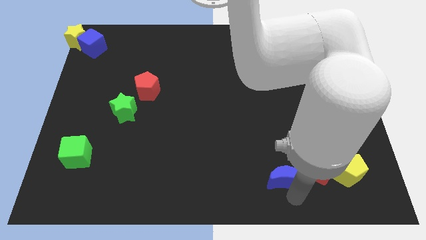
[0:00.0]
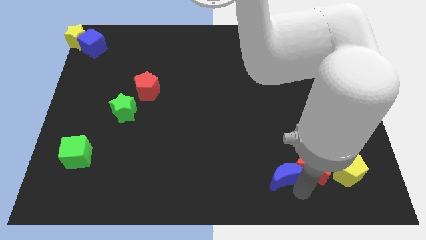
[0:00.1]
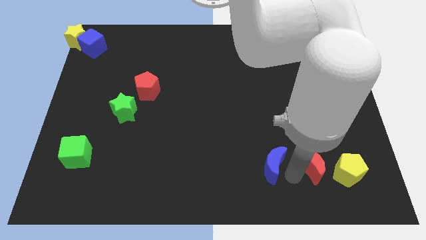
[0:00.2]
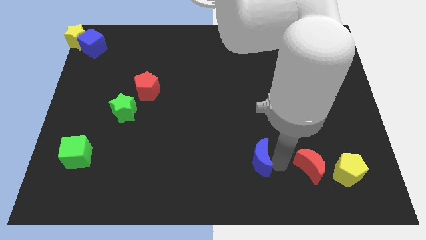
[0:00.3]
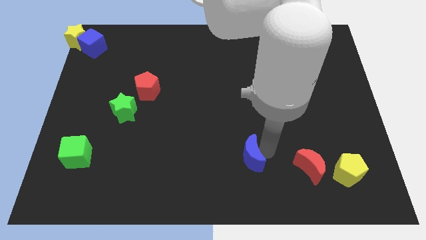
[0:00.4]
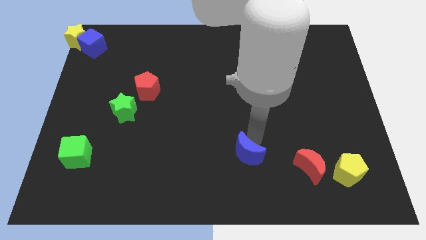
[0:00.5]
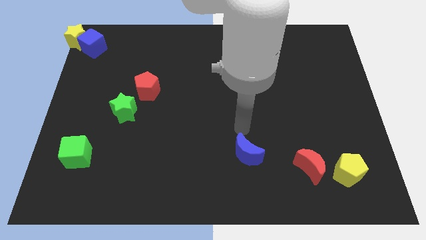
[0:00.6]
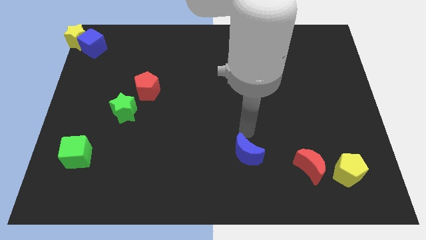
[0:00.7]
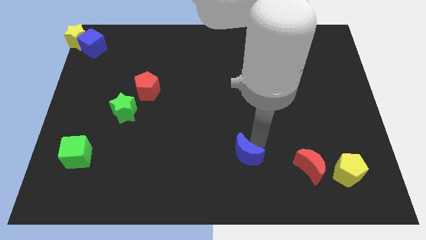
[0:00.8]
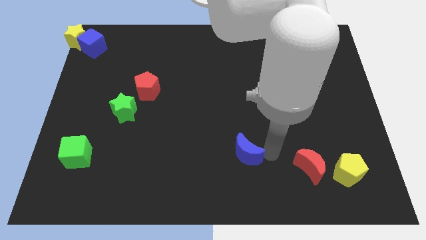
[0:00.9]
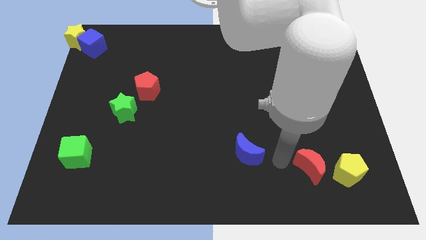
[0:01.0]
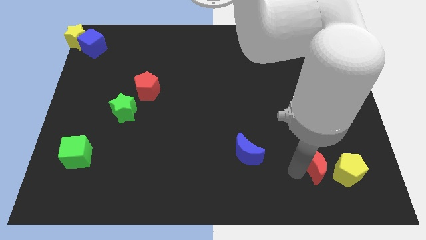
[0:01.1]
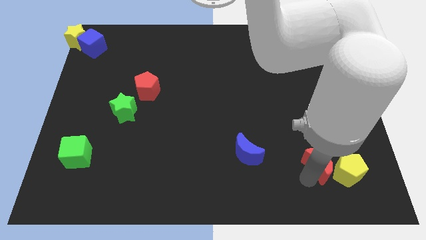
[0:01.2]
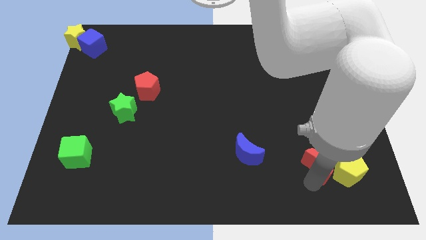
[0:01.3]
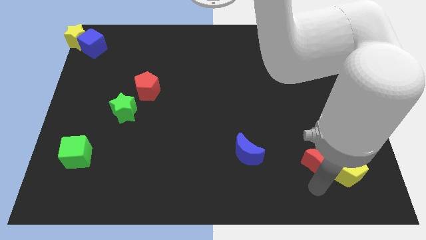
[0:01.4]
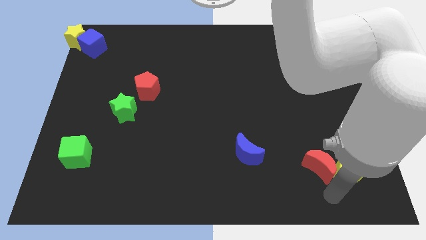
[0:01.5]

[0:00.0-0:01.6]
separate blue crescent from red crescent

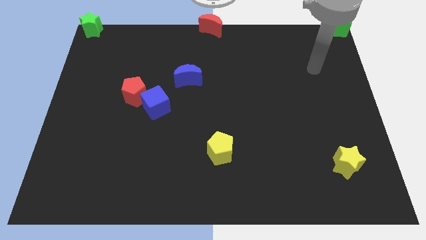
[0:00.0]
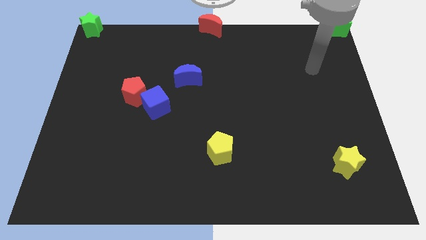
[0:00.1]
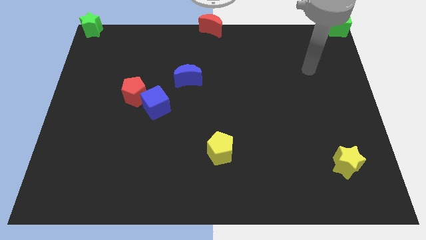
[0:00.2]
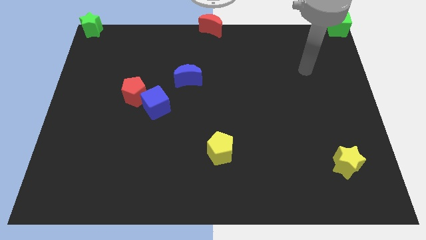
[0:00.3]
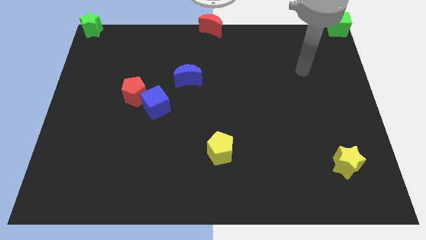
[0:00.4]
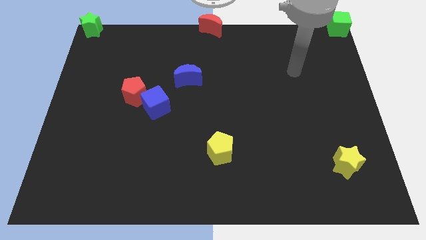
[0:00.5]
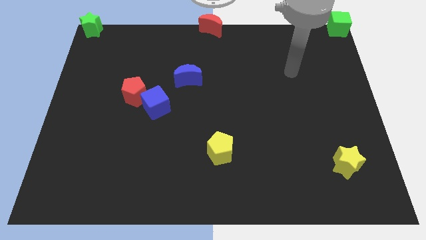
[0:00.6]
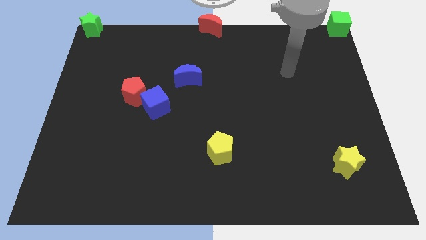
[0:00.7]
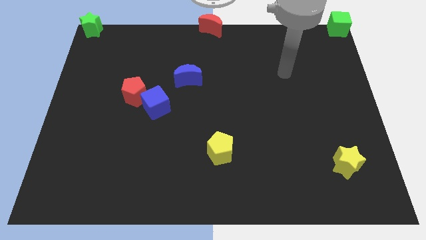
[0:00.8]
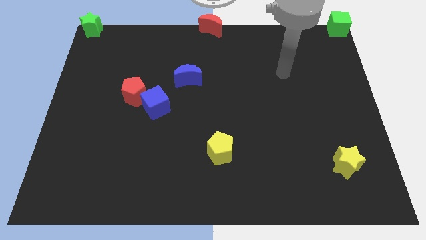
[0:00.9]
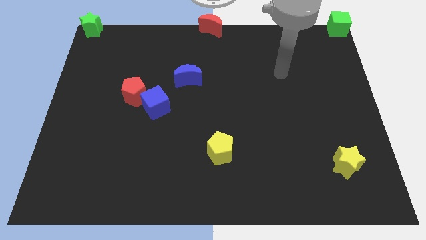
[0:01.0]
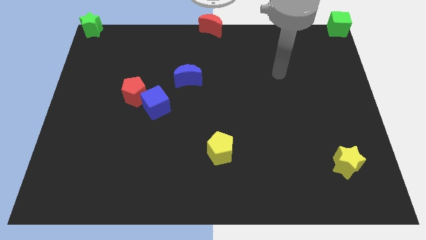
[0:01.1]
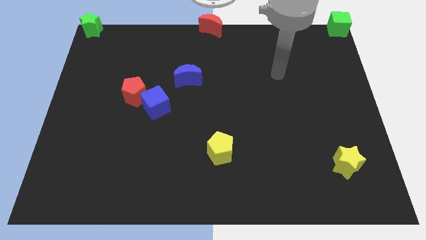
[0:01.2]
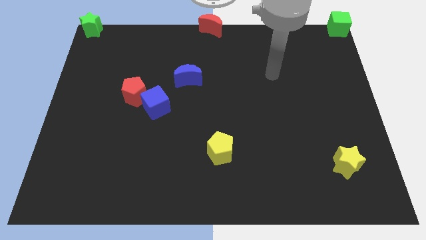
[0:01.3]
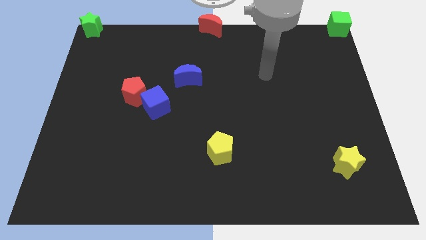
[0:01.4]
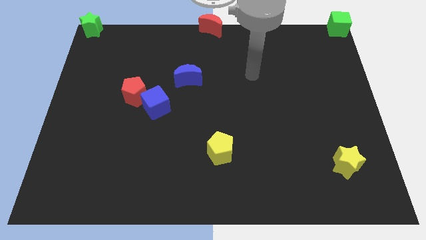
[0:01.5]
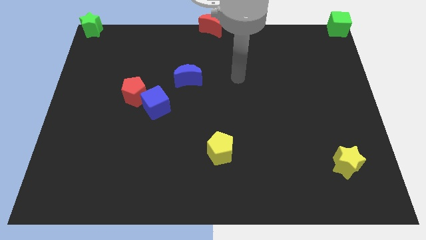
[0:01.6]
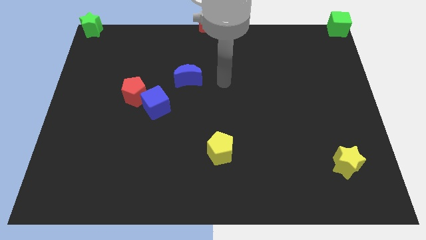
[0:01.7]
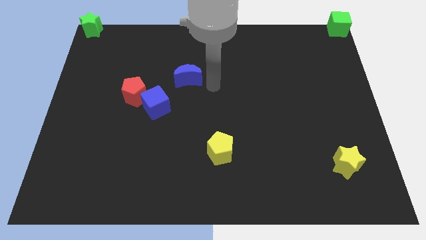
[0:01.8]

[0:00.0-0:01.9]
move your arm to the right of blue moon

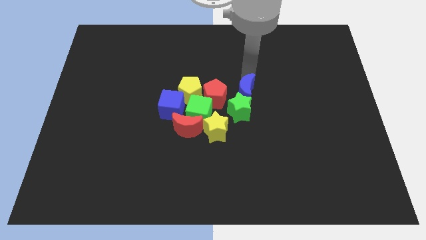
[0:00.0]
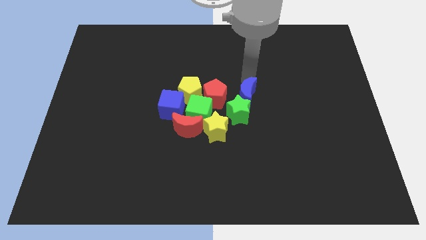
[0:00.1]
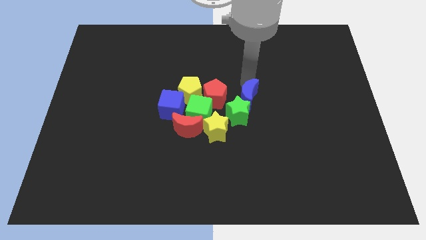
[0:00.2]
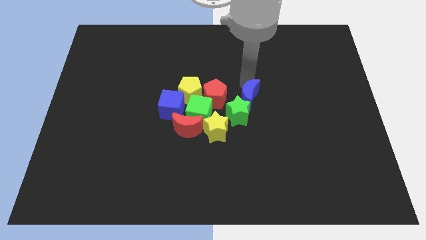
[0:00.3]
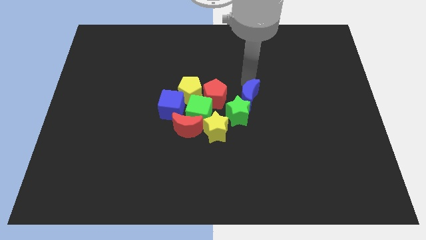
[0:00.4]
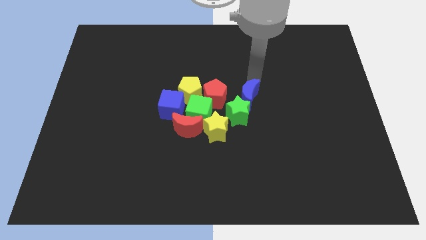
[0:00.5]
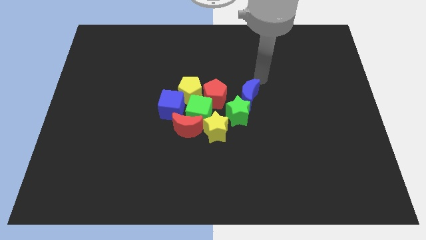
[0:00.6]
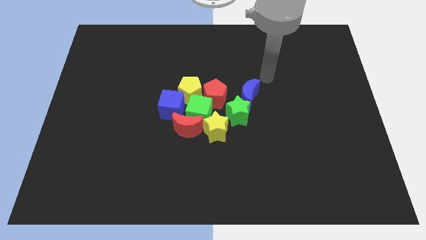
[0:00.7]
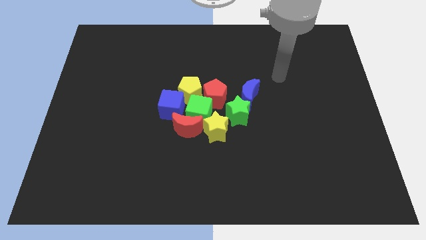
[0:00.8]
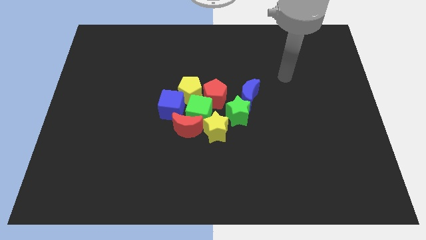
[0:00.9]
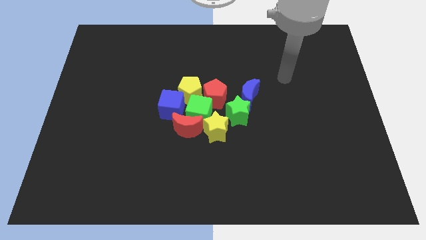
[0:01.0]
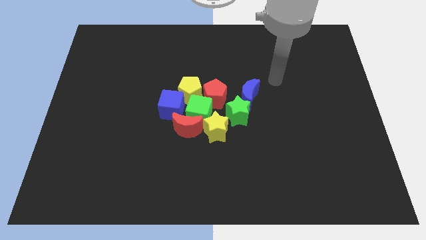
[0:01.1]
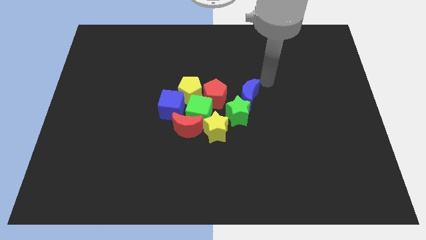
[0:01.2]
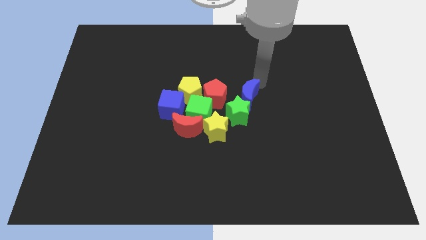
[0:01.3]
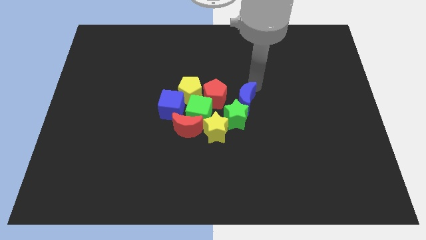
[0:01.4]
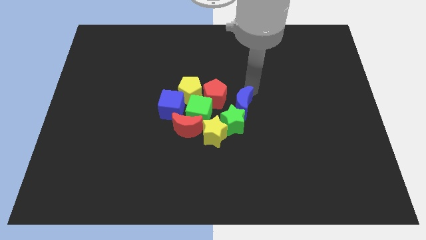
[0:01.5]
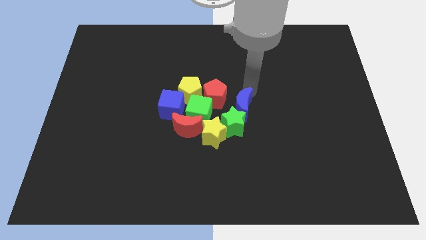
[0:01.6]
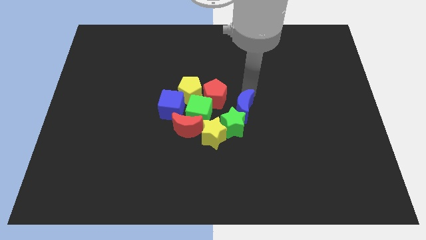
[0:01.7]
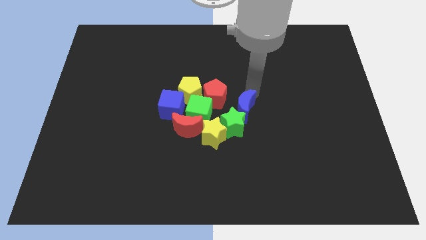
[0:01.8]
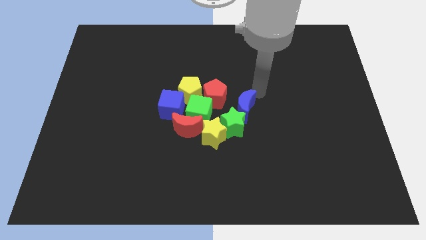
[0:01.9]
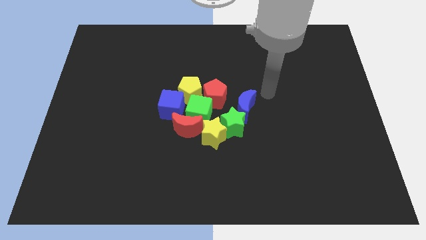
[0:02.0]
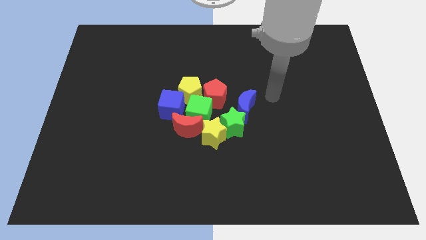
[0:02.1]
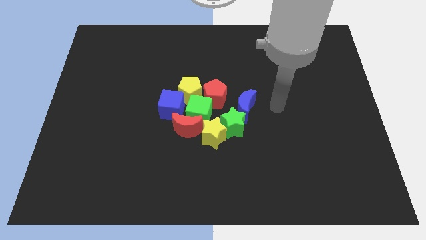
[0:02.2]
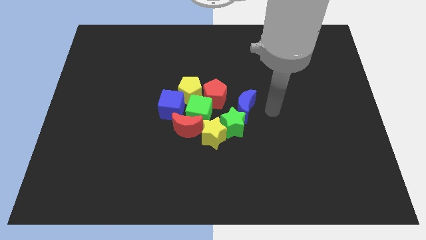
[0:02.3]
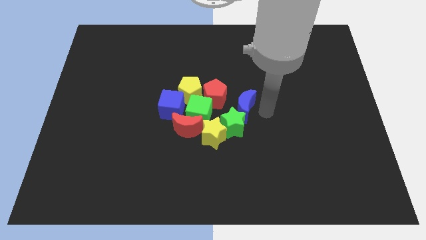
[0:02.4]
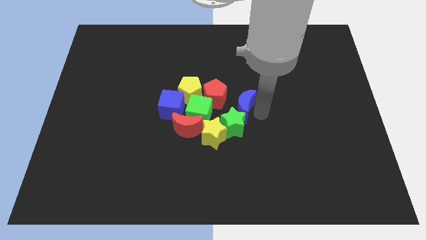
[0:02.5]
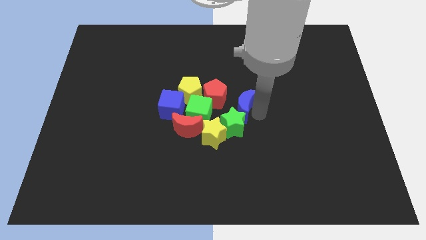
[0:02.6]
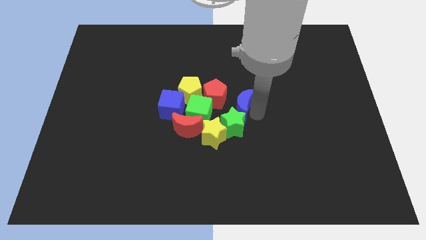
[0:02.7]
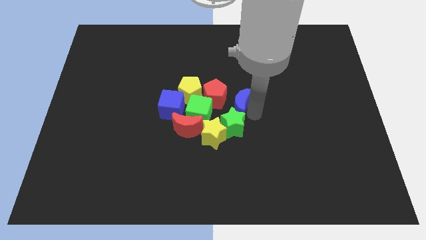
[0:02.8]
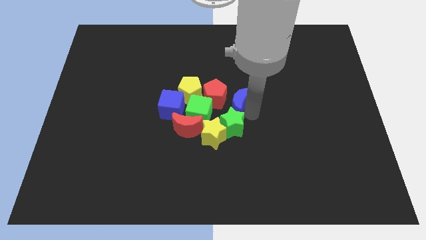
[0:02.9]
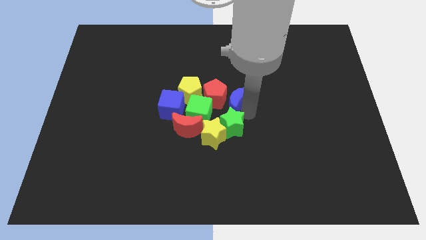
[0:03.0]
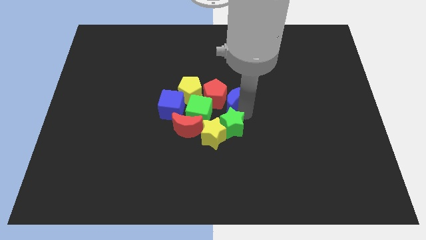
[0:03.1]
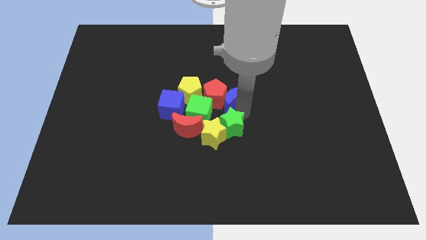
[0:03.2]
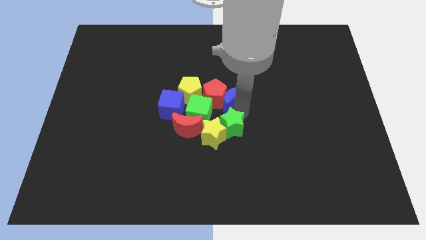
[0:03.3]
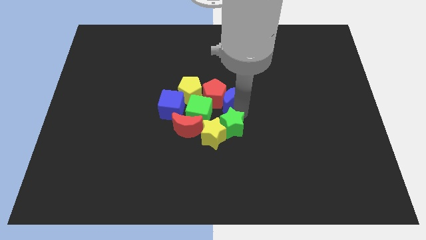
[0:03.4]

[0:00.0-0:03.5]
push the blue moon slightly to the right of red pentagon

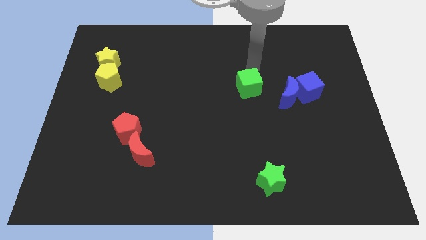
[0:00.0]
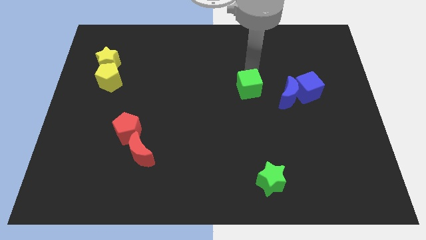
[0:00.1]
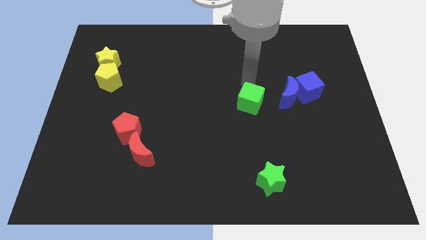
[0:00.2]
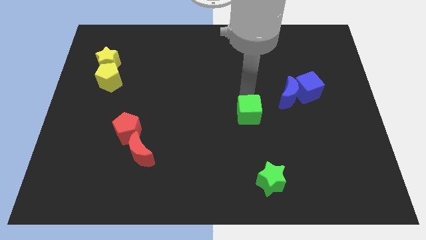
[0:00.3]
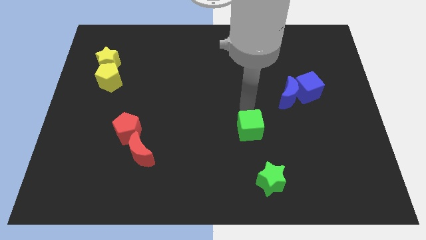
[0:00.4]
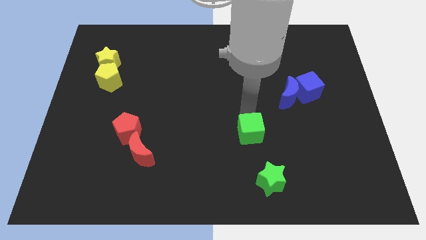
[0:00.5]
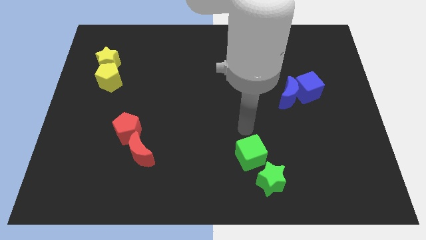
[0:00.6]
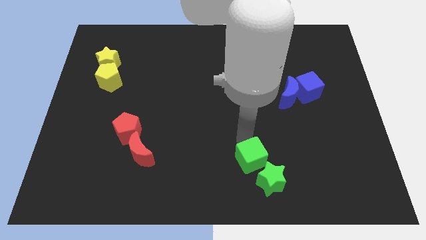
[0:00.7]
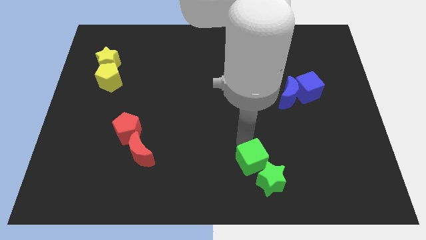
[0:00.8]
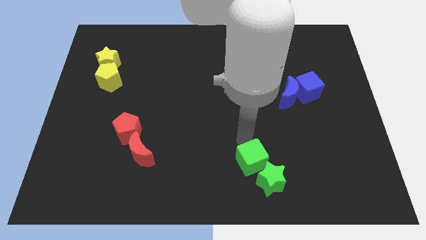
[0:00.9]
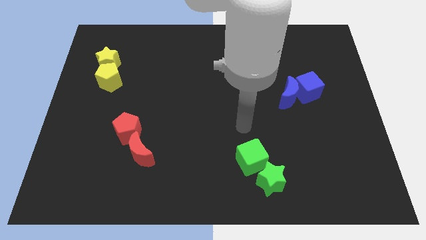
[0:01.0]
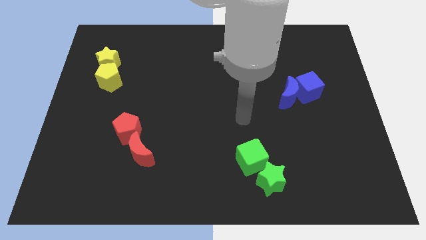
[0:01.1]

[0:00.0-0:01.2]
push the green cube to the top left of the green star

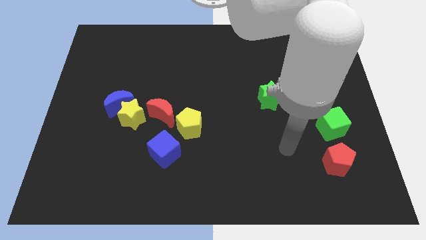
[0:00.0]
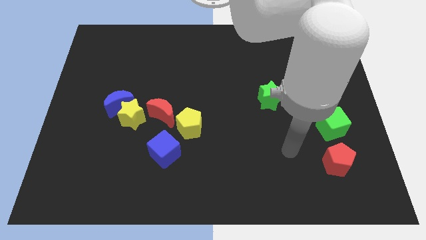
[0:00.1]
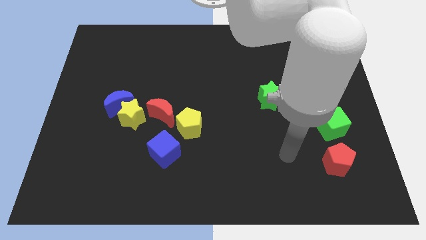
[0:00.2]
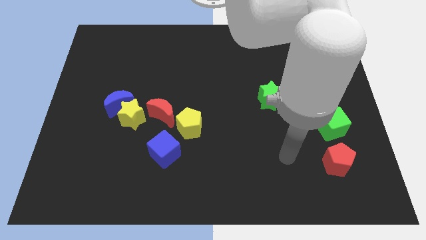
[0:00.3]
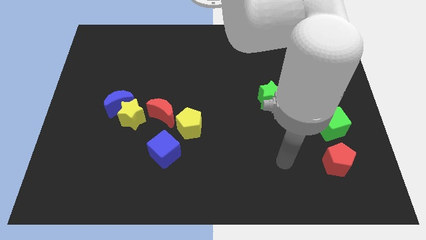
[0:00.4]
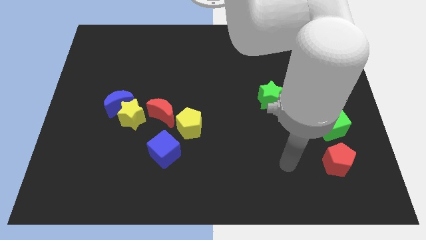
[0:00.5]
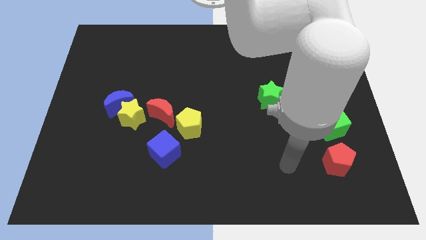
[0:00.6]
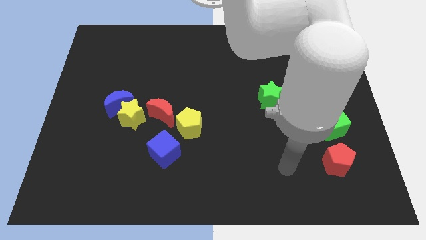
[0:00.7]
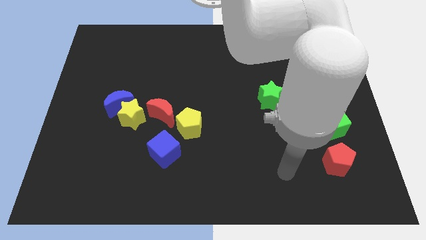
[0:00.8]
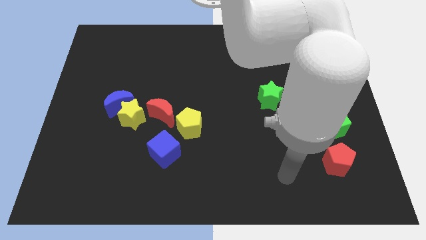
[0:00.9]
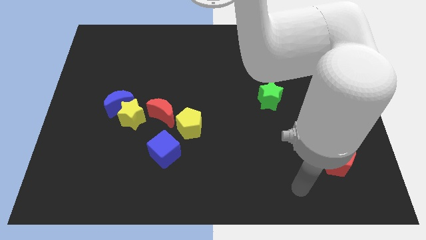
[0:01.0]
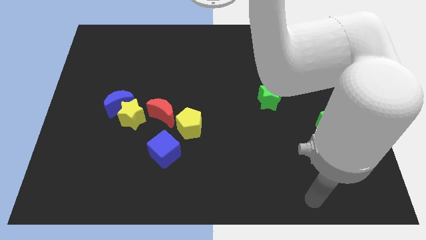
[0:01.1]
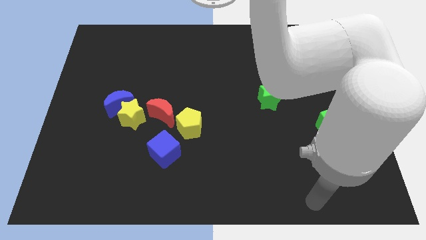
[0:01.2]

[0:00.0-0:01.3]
move your arm towards the bottom side of the board
